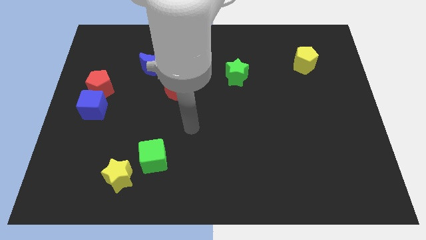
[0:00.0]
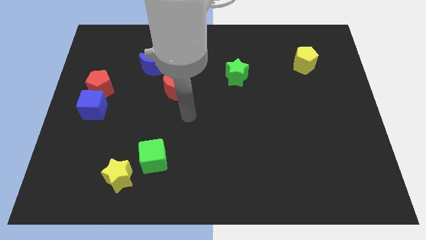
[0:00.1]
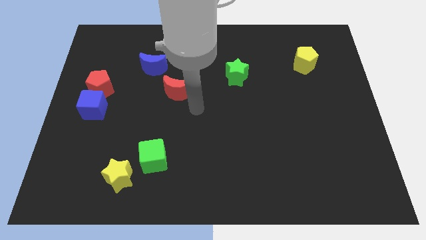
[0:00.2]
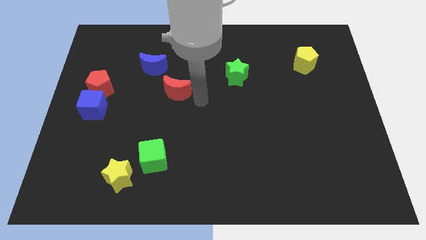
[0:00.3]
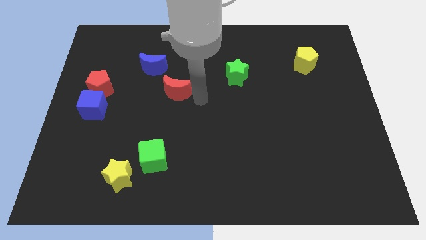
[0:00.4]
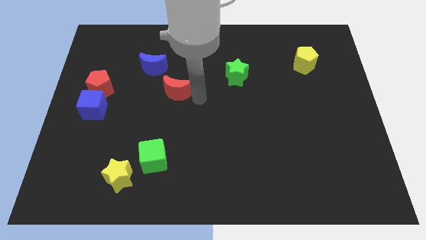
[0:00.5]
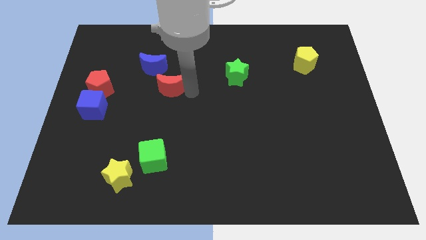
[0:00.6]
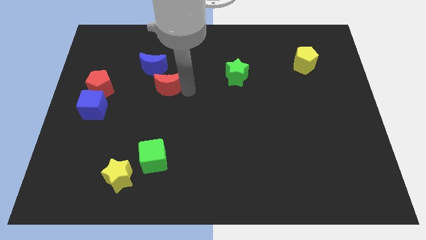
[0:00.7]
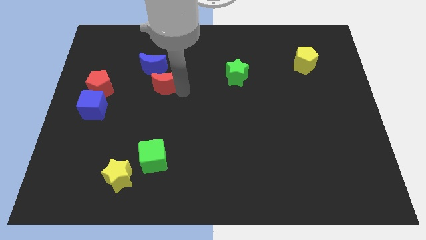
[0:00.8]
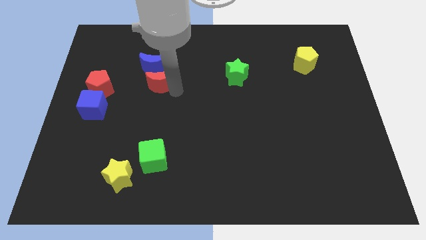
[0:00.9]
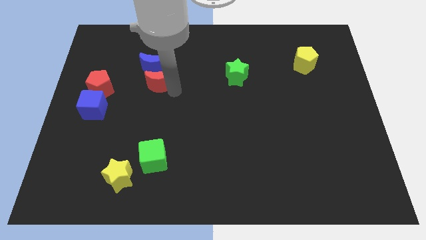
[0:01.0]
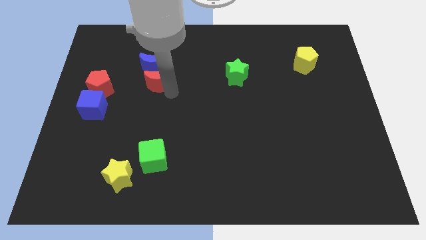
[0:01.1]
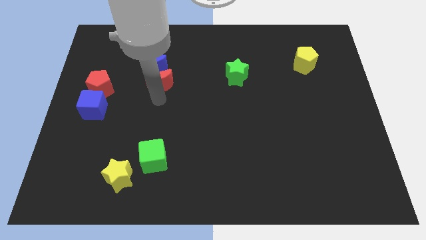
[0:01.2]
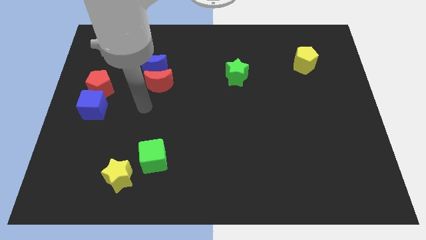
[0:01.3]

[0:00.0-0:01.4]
push the red crescent to the bottom of the blue crescent

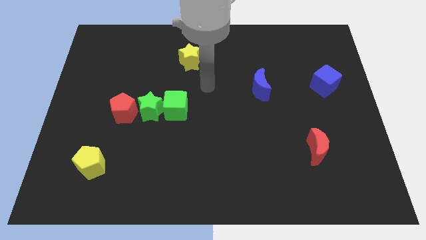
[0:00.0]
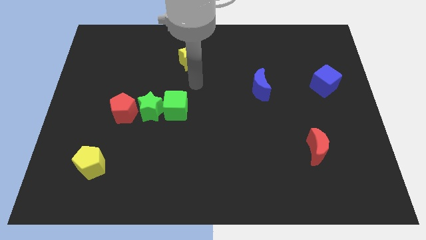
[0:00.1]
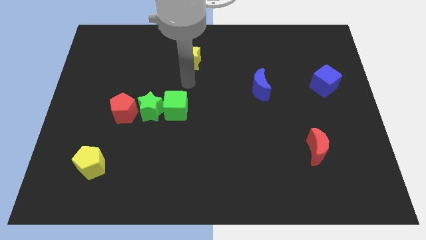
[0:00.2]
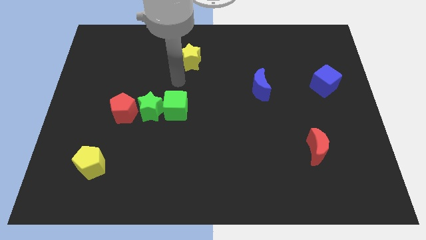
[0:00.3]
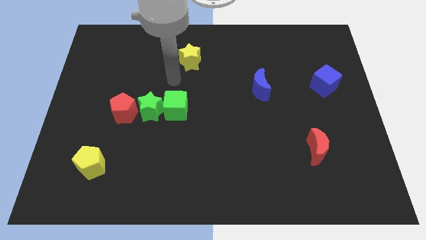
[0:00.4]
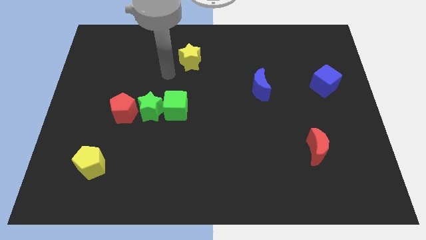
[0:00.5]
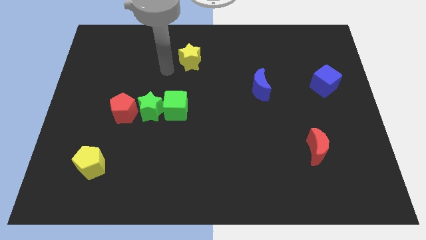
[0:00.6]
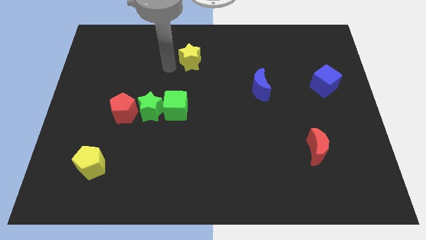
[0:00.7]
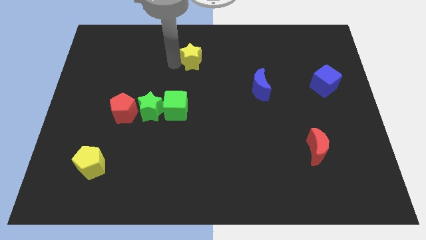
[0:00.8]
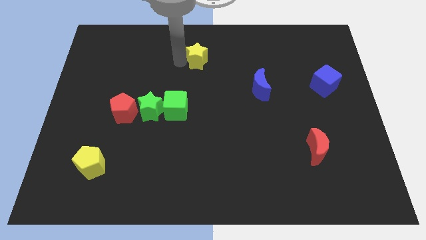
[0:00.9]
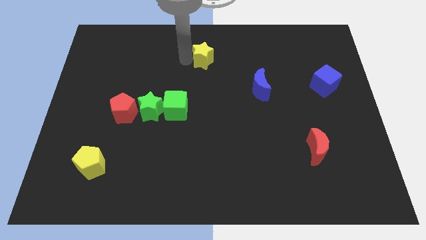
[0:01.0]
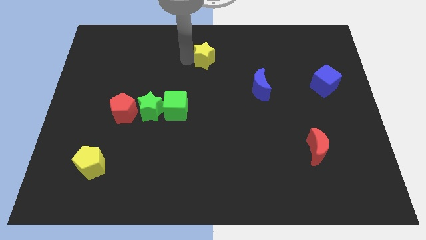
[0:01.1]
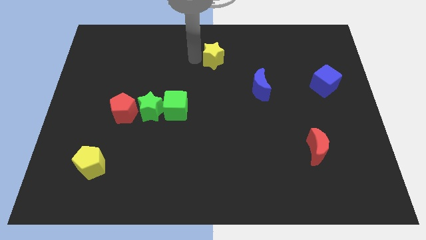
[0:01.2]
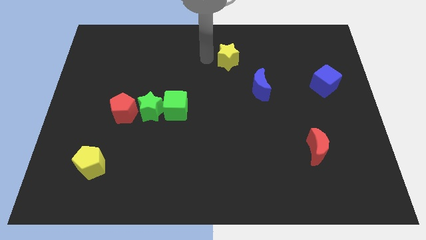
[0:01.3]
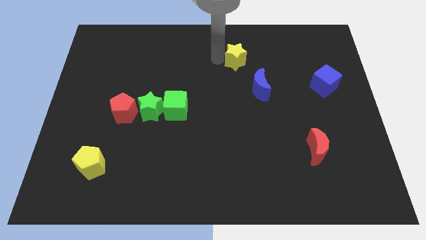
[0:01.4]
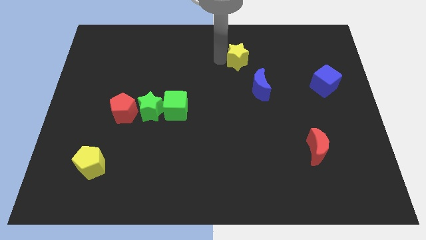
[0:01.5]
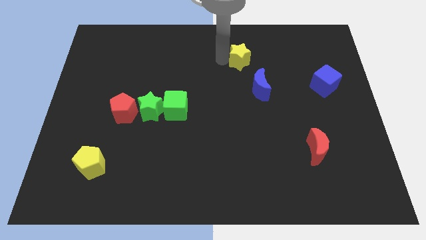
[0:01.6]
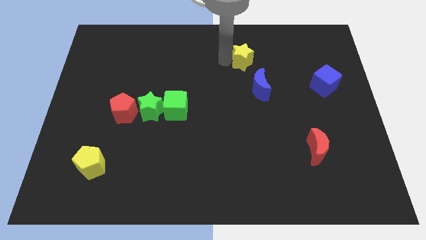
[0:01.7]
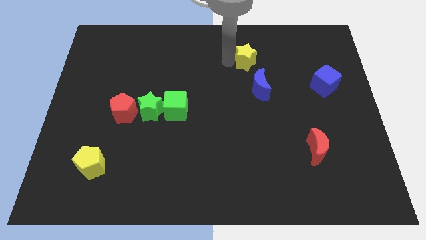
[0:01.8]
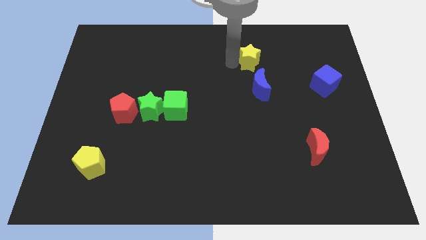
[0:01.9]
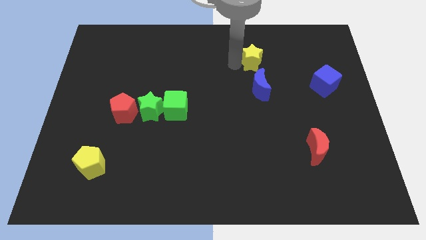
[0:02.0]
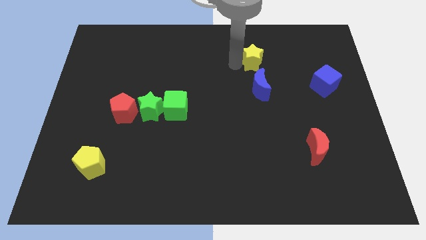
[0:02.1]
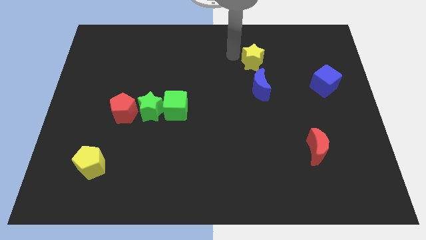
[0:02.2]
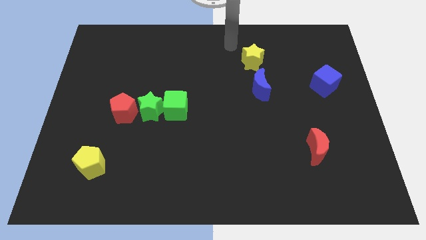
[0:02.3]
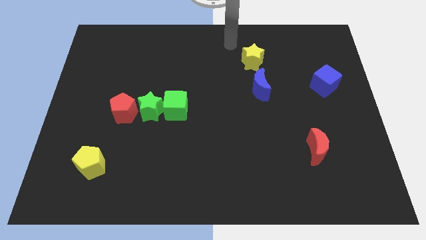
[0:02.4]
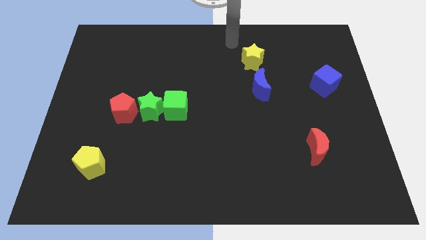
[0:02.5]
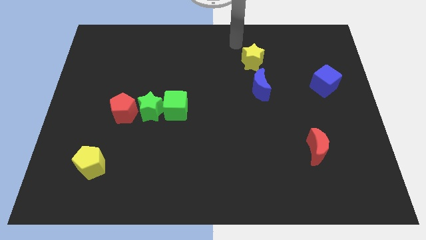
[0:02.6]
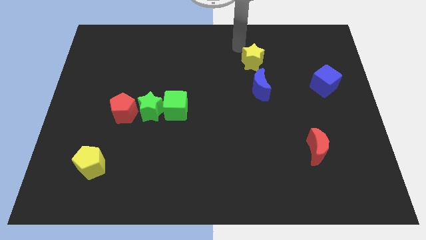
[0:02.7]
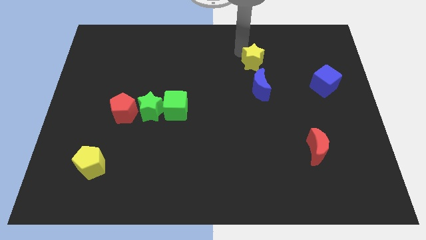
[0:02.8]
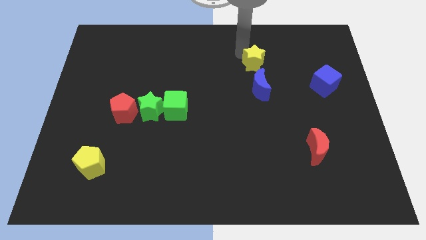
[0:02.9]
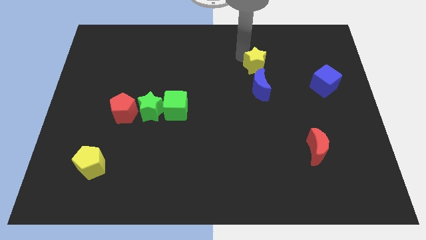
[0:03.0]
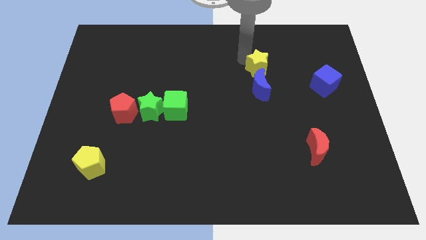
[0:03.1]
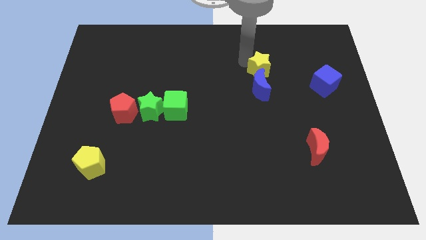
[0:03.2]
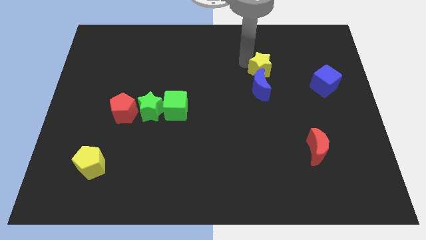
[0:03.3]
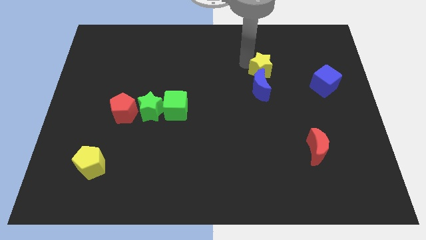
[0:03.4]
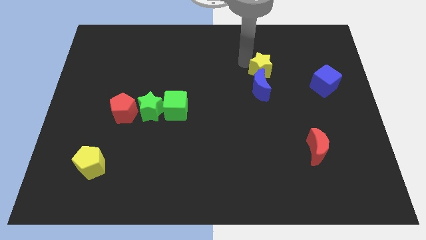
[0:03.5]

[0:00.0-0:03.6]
place yellow star to the top of blue moon

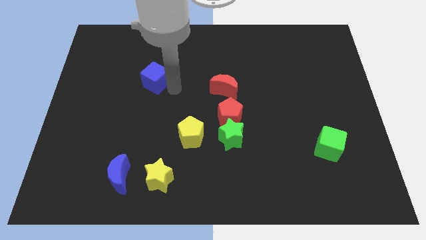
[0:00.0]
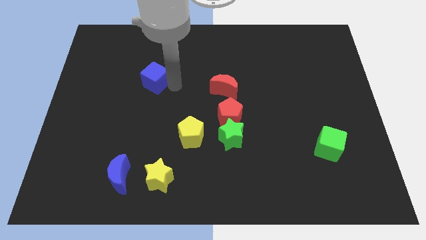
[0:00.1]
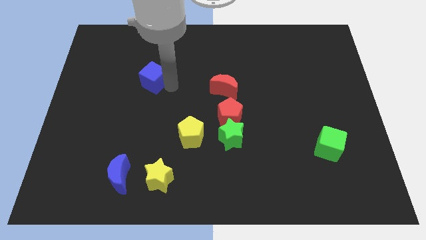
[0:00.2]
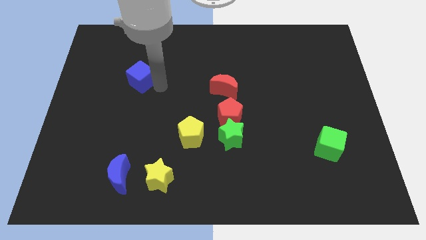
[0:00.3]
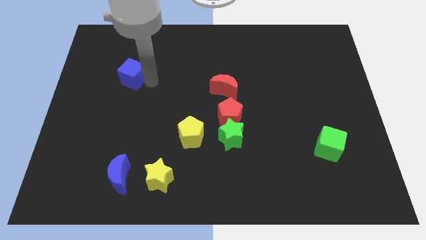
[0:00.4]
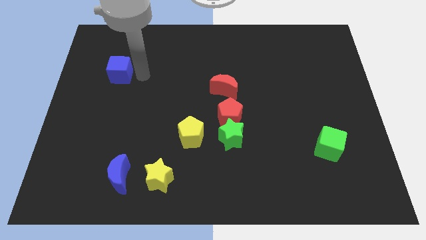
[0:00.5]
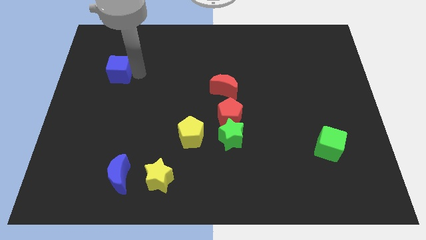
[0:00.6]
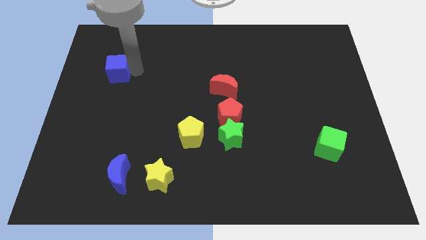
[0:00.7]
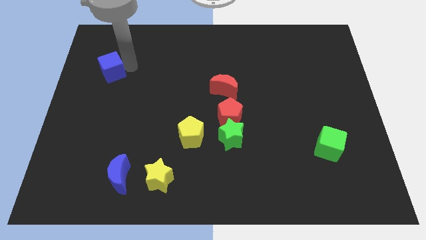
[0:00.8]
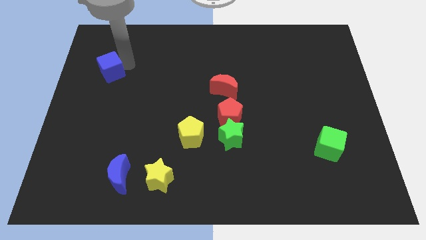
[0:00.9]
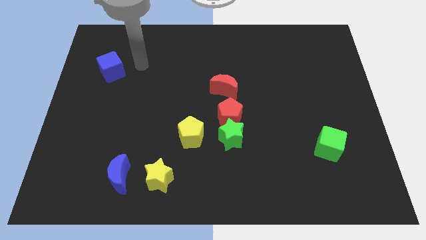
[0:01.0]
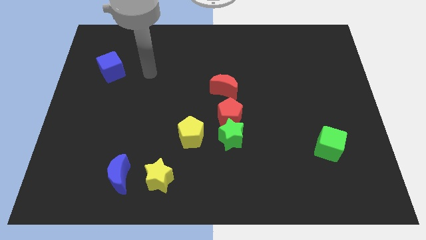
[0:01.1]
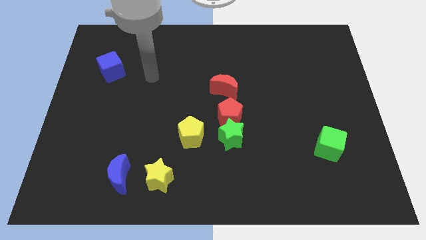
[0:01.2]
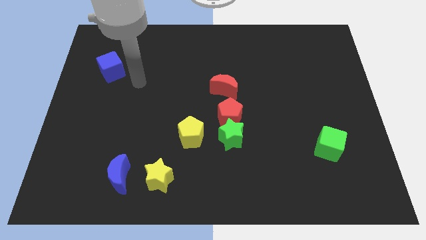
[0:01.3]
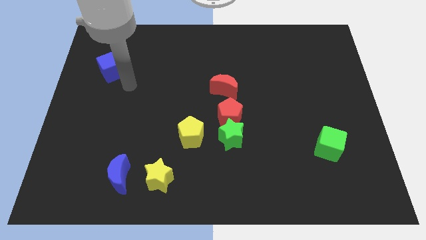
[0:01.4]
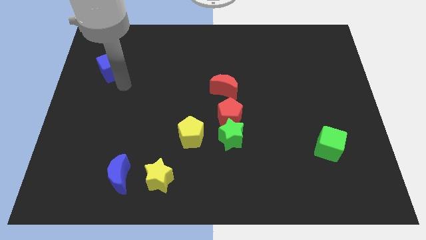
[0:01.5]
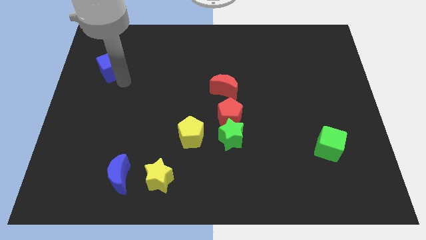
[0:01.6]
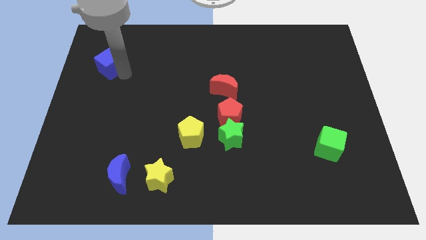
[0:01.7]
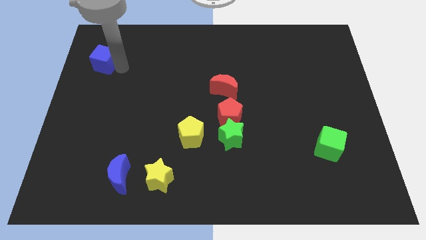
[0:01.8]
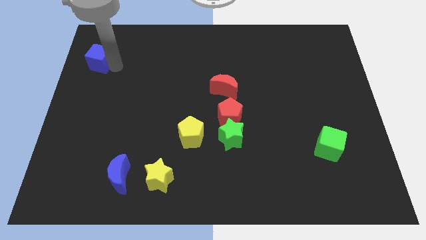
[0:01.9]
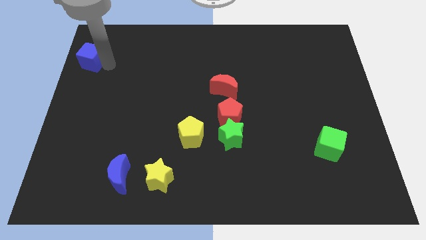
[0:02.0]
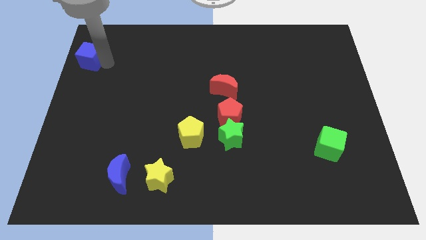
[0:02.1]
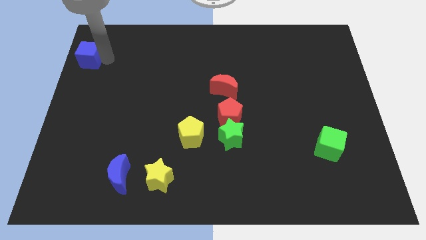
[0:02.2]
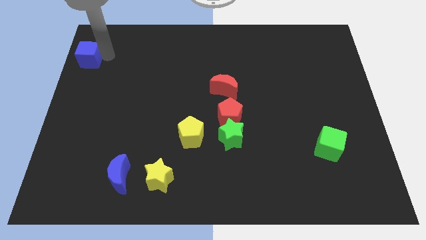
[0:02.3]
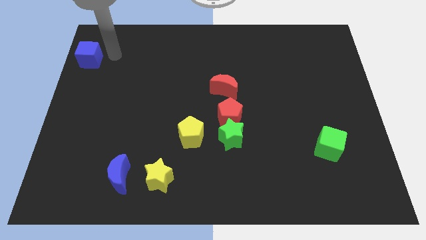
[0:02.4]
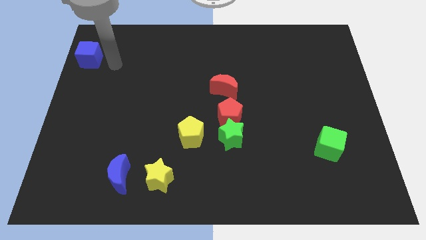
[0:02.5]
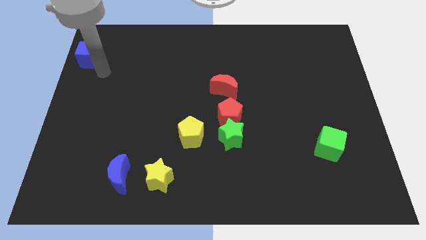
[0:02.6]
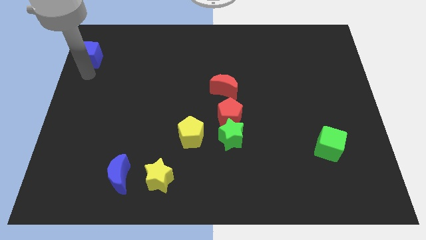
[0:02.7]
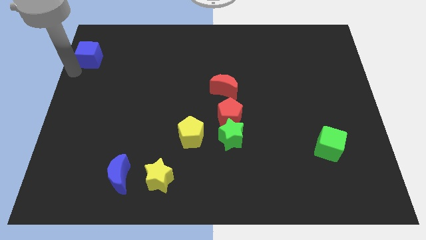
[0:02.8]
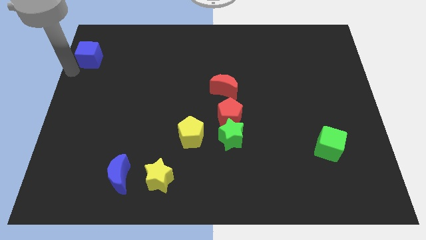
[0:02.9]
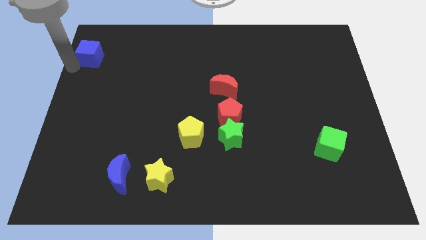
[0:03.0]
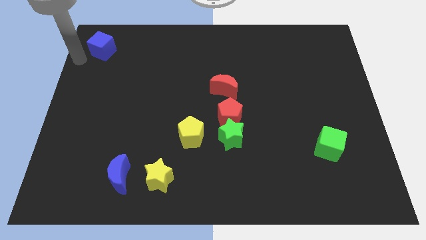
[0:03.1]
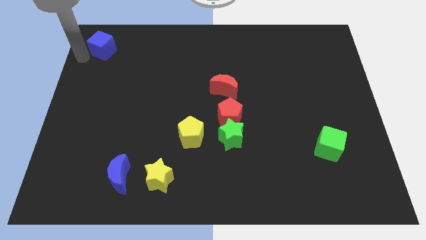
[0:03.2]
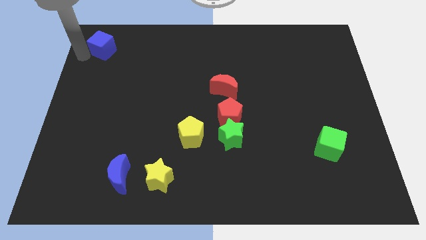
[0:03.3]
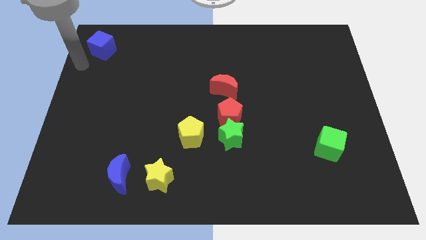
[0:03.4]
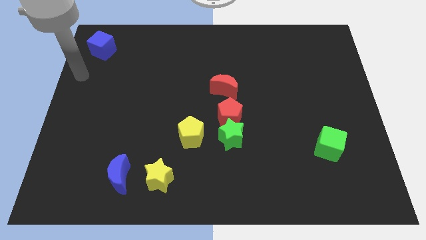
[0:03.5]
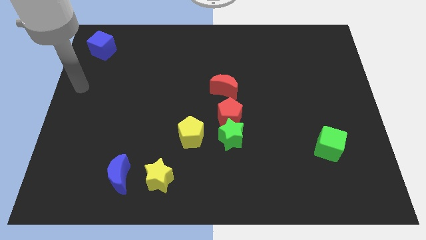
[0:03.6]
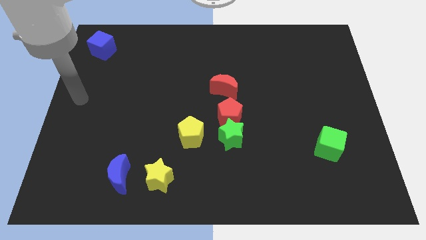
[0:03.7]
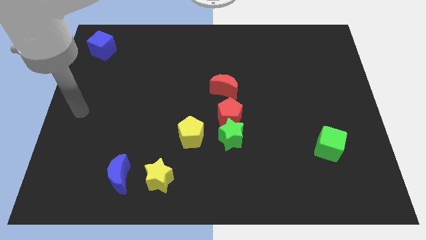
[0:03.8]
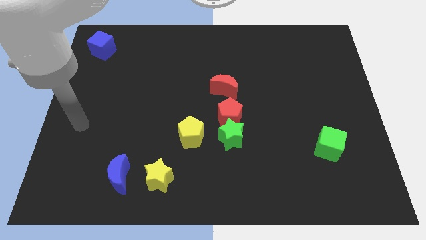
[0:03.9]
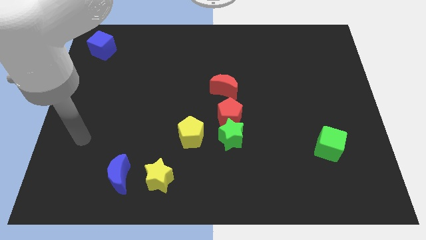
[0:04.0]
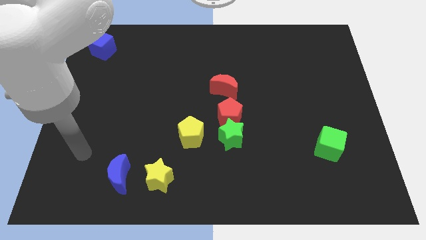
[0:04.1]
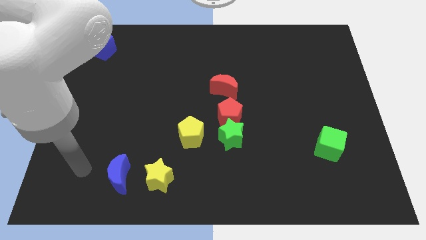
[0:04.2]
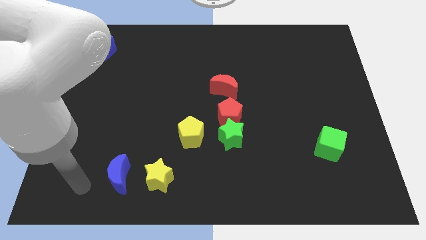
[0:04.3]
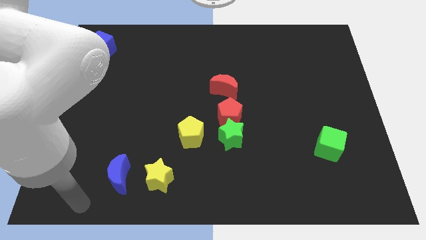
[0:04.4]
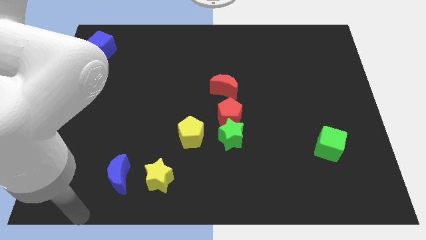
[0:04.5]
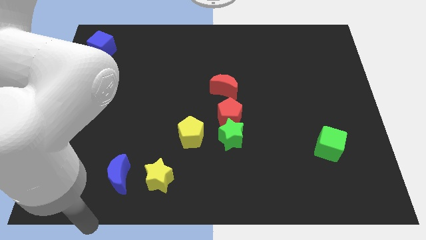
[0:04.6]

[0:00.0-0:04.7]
move the blue cube towards the top left corner of the board
